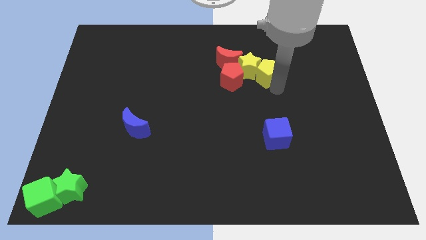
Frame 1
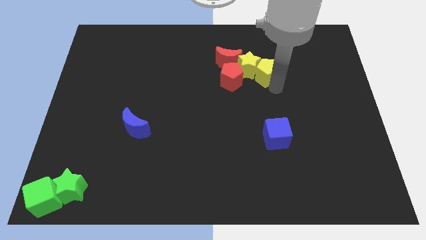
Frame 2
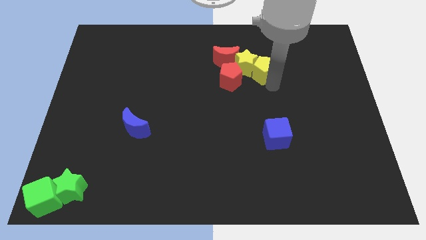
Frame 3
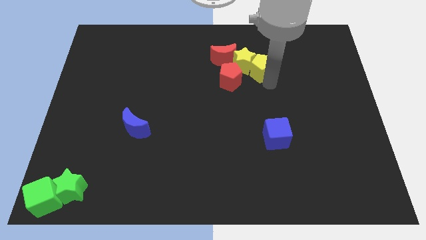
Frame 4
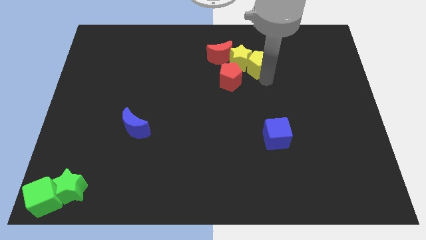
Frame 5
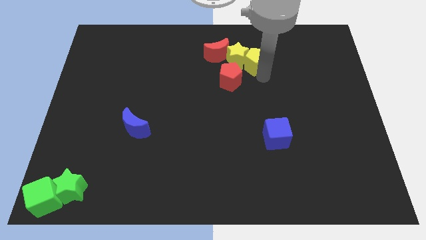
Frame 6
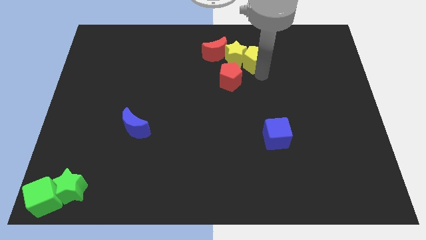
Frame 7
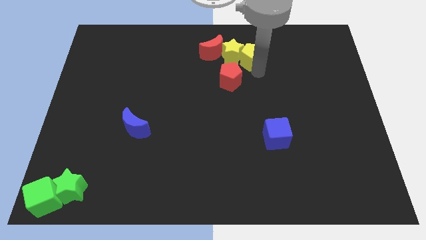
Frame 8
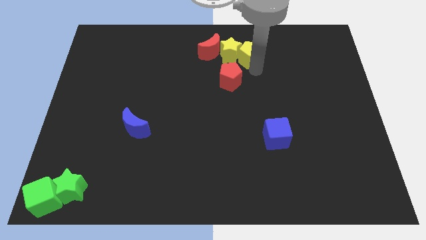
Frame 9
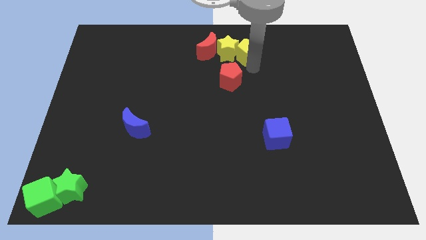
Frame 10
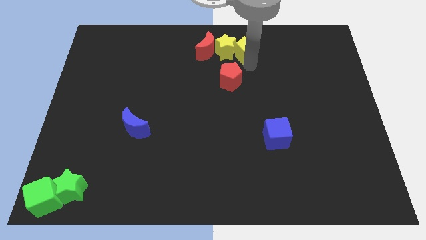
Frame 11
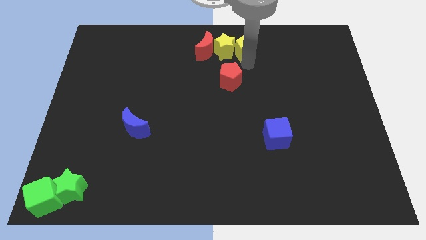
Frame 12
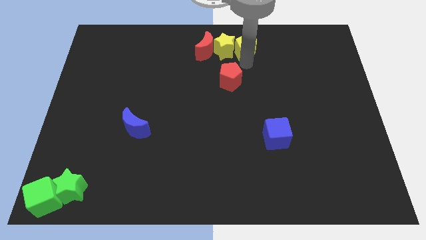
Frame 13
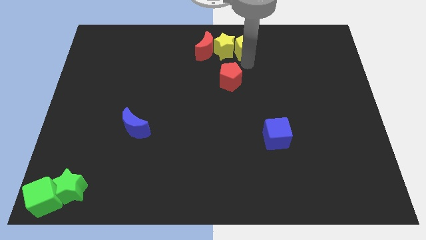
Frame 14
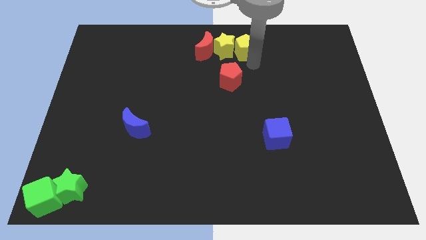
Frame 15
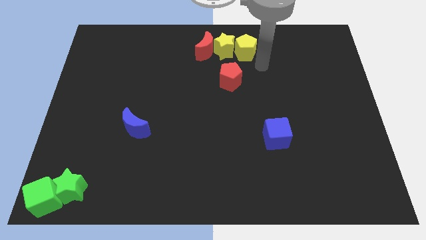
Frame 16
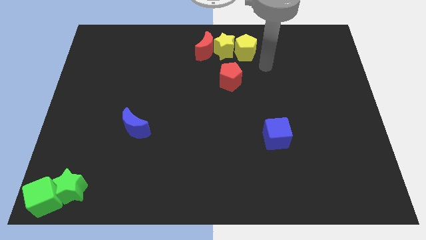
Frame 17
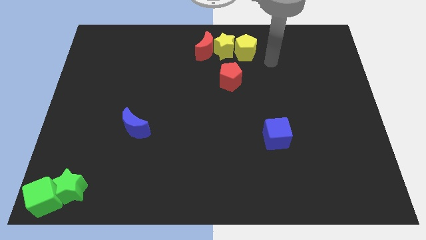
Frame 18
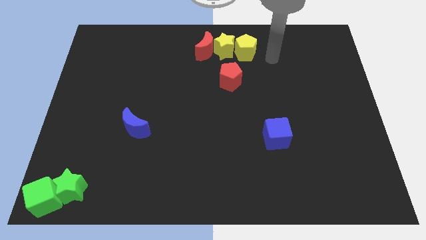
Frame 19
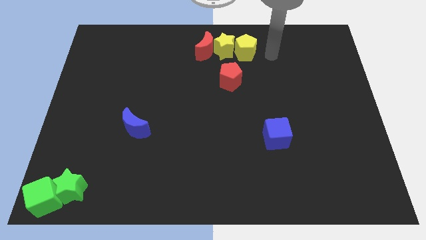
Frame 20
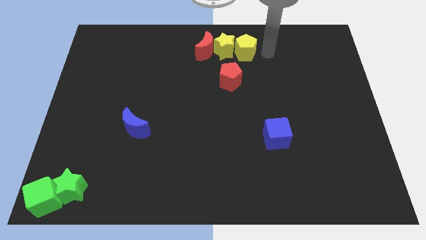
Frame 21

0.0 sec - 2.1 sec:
move the yellow blocks to the right side of the red moon

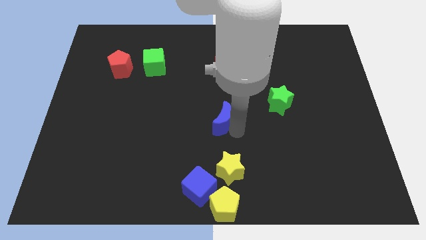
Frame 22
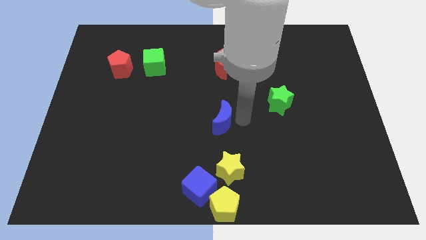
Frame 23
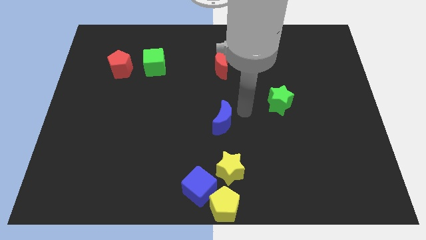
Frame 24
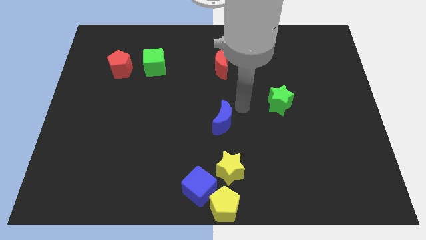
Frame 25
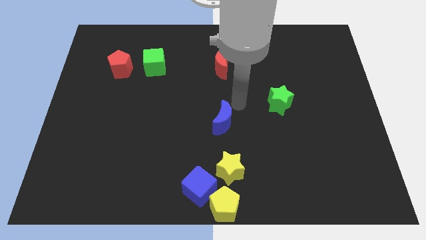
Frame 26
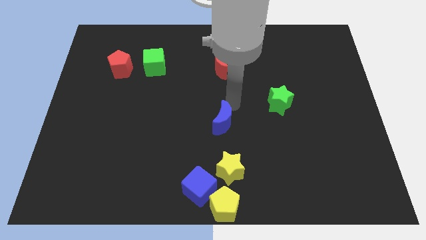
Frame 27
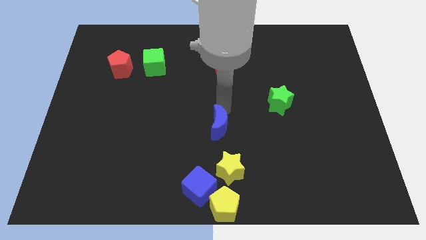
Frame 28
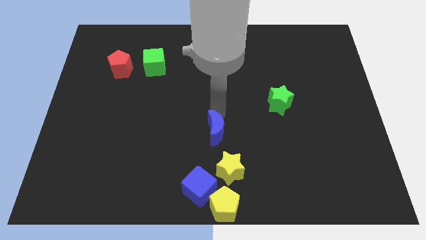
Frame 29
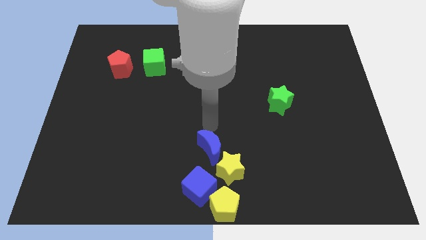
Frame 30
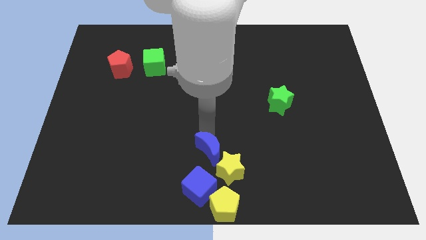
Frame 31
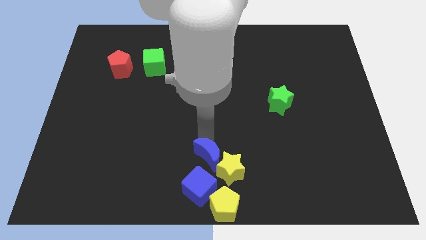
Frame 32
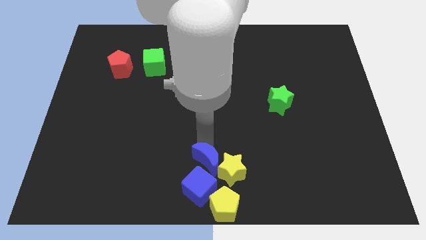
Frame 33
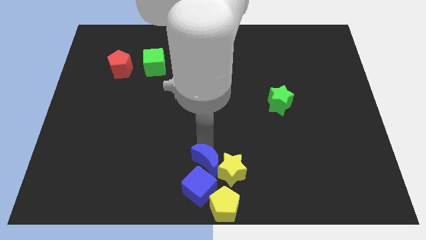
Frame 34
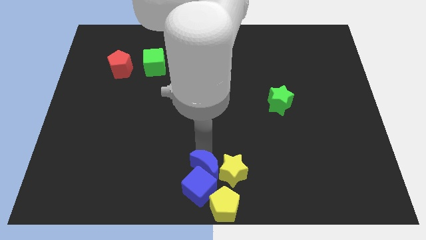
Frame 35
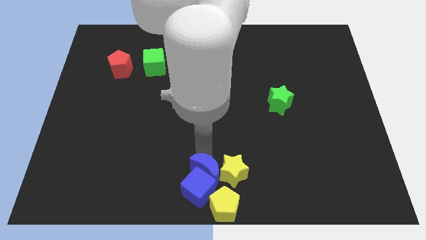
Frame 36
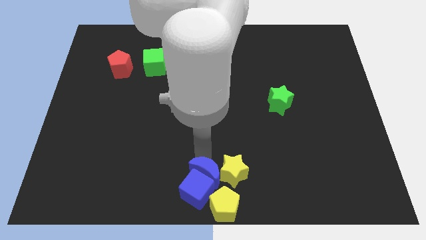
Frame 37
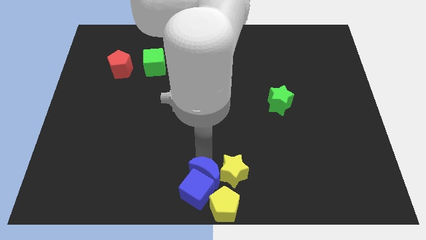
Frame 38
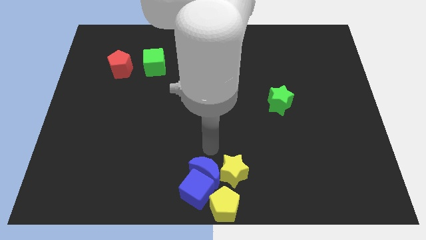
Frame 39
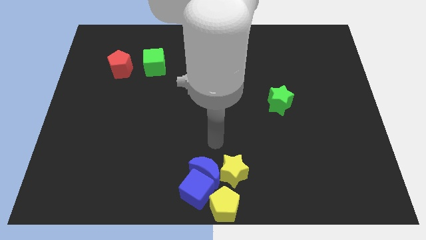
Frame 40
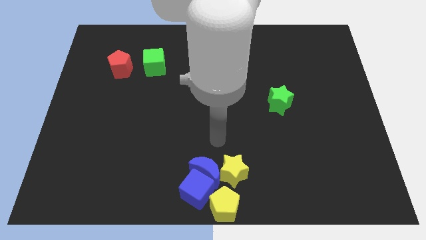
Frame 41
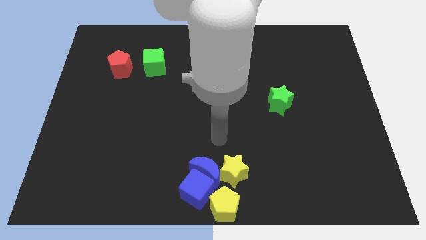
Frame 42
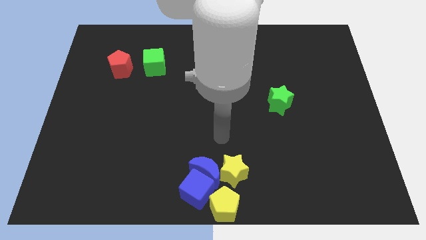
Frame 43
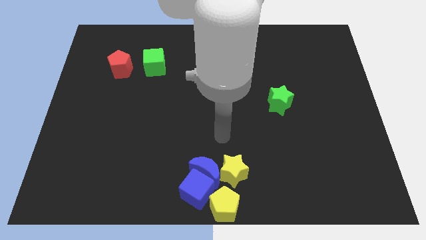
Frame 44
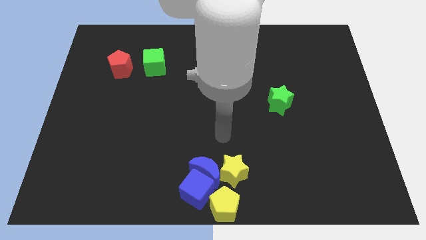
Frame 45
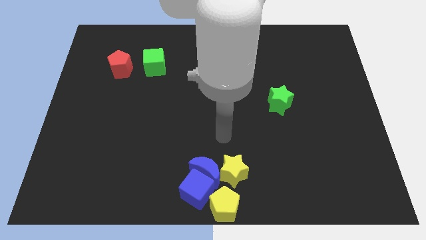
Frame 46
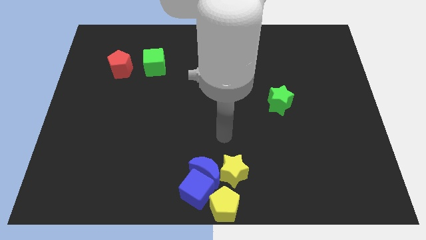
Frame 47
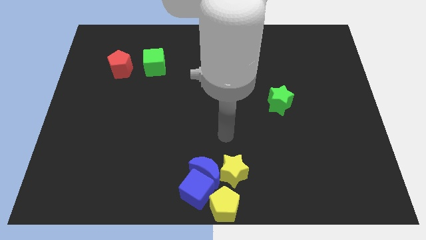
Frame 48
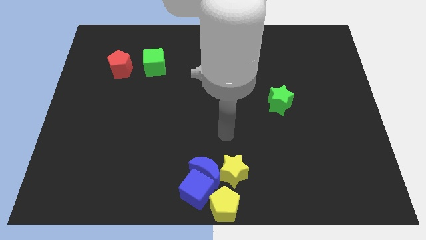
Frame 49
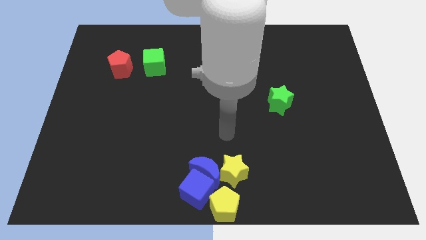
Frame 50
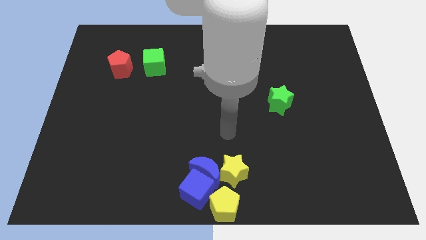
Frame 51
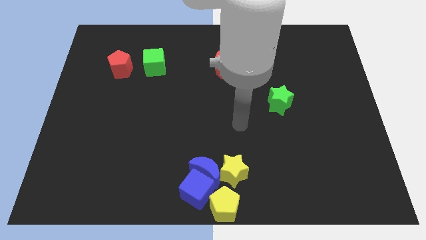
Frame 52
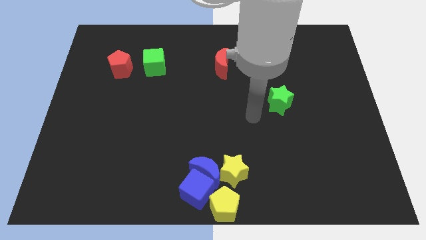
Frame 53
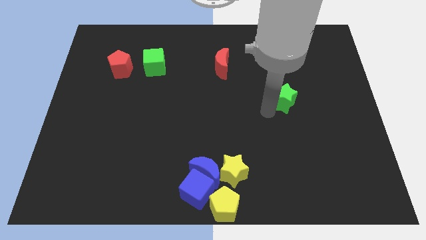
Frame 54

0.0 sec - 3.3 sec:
push the blue moon into the blue cube

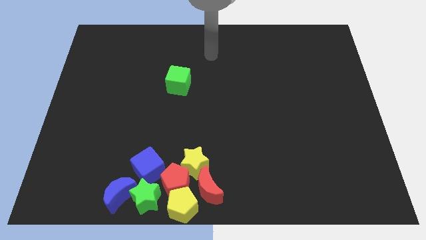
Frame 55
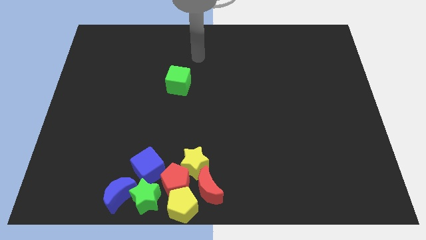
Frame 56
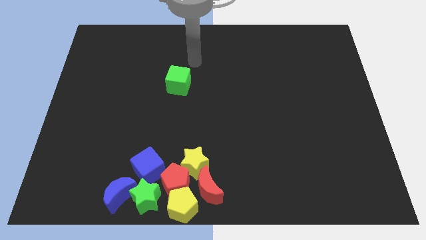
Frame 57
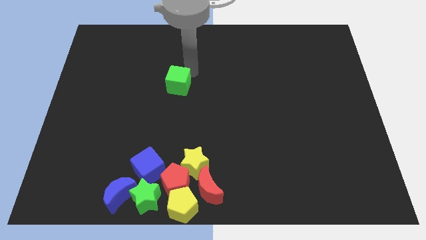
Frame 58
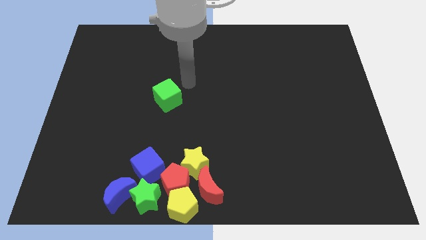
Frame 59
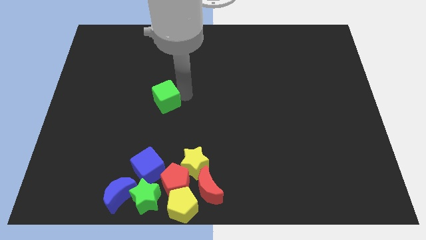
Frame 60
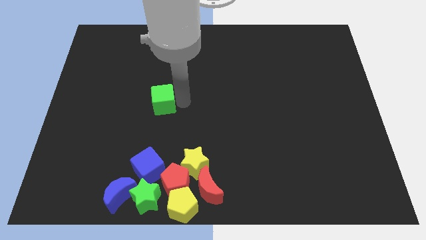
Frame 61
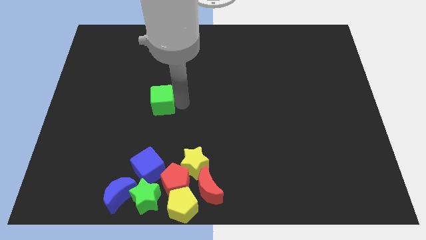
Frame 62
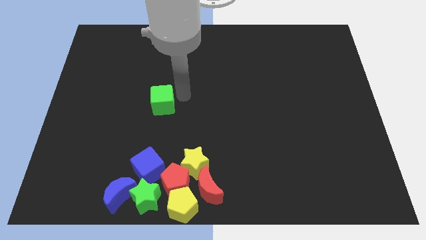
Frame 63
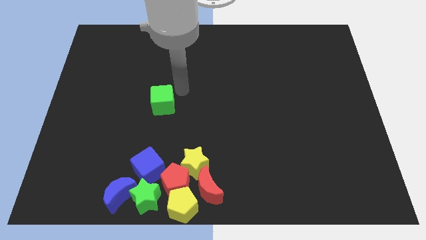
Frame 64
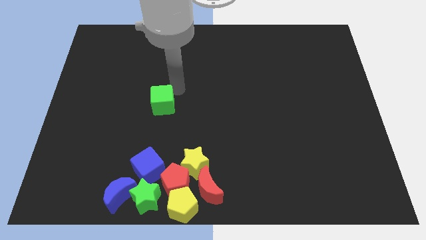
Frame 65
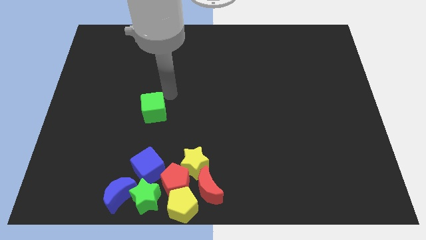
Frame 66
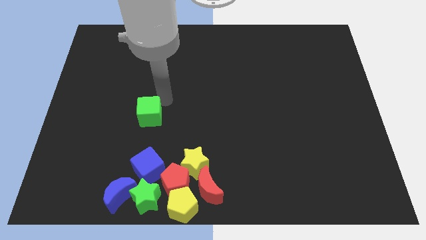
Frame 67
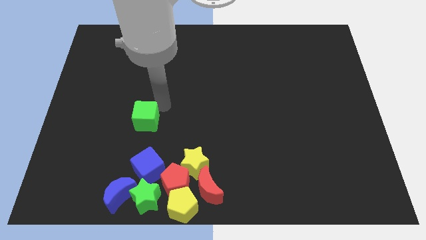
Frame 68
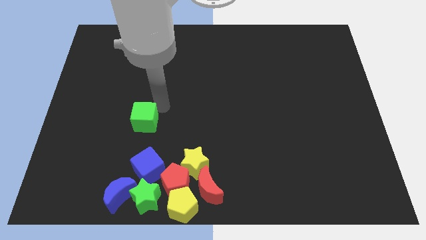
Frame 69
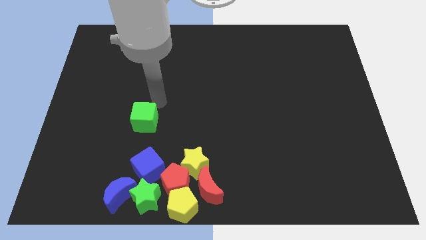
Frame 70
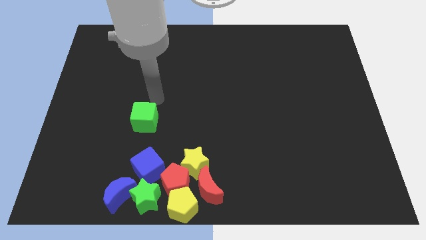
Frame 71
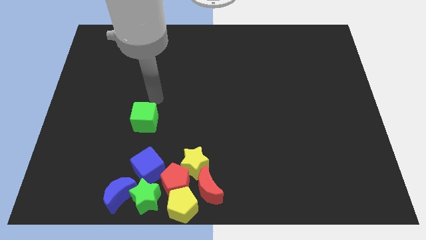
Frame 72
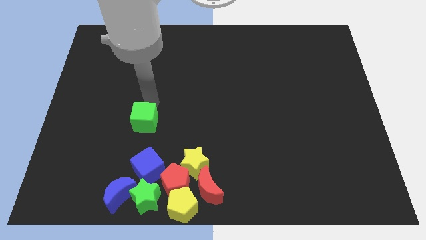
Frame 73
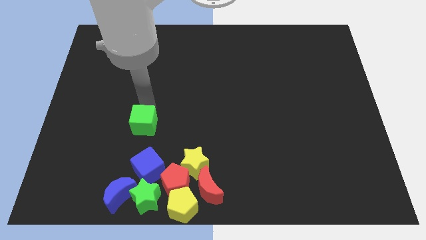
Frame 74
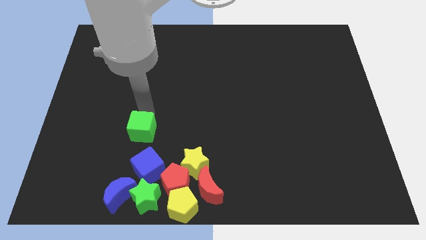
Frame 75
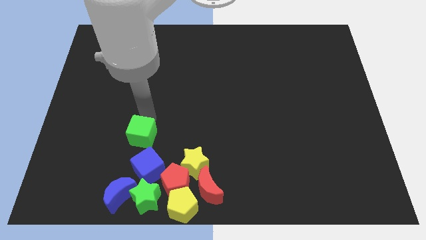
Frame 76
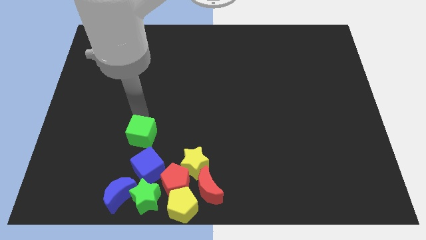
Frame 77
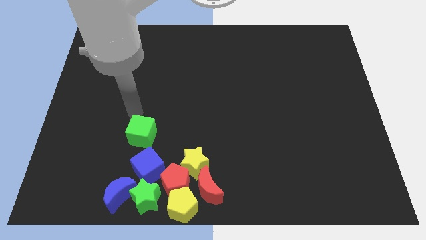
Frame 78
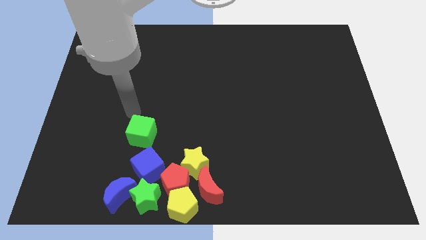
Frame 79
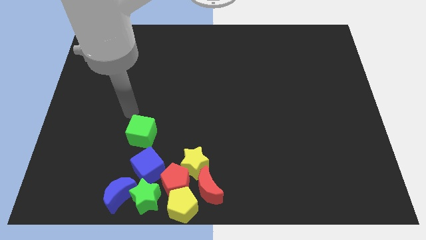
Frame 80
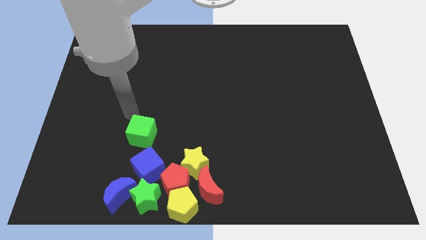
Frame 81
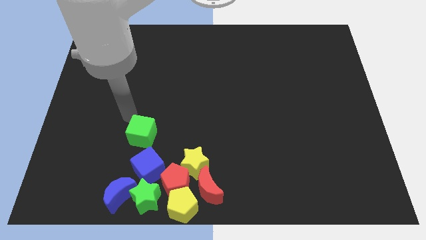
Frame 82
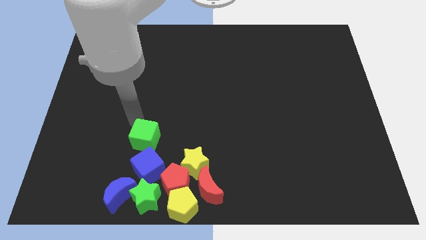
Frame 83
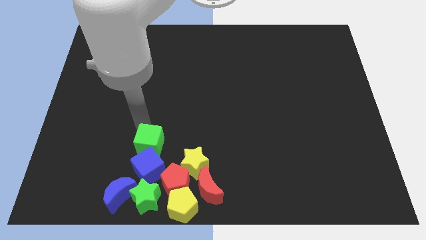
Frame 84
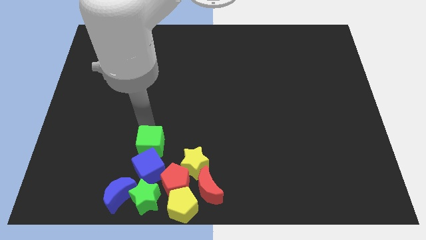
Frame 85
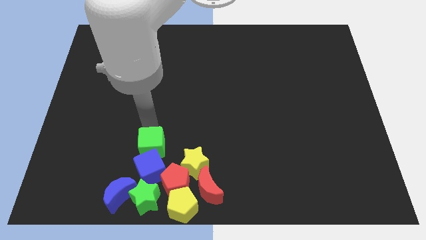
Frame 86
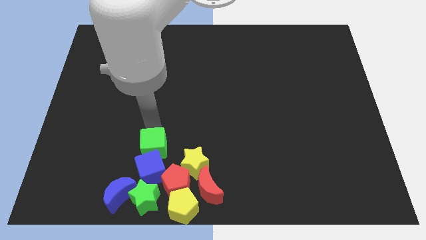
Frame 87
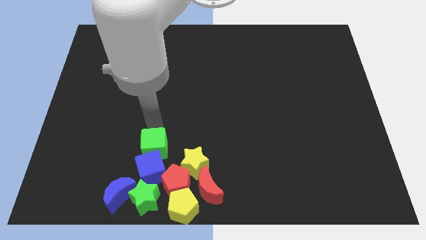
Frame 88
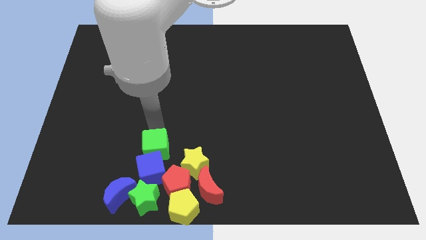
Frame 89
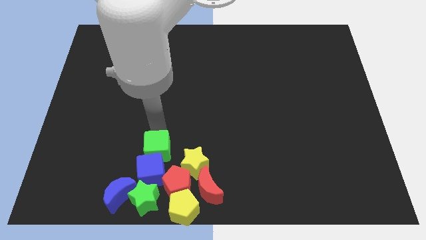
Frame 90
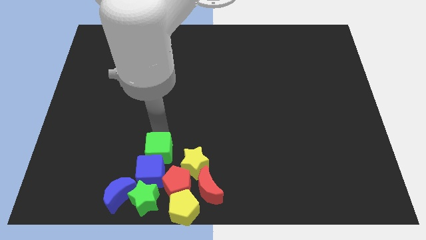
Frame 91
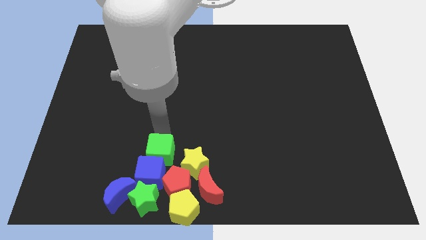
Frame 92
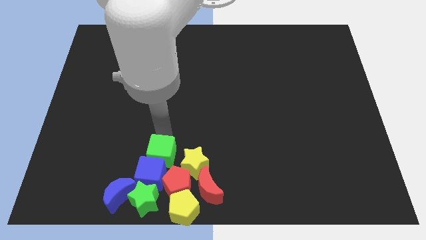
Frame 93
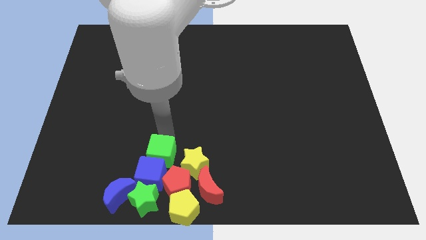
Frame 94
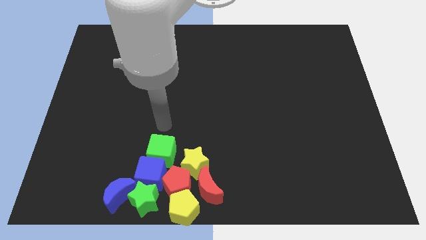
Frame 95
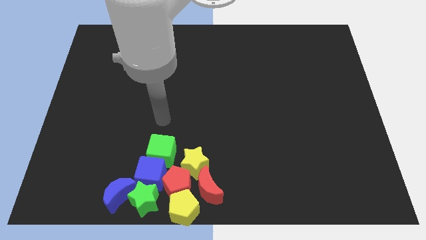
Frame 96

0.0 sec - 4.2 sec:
push green cube above blue cube
